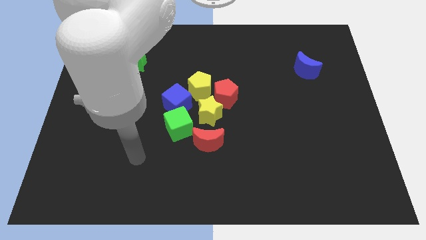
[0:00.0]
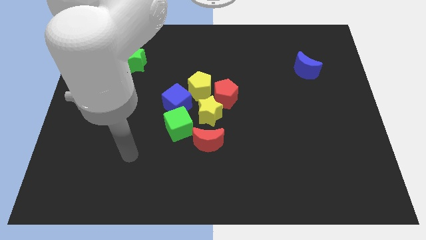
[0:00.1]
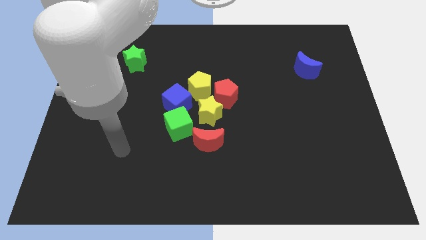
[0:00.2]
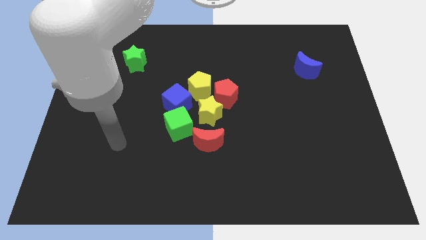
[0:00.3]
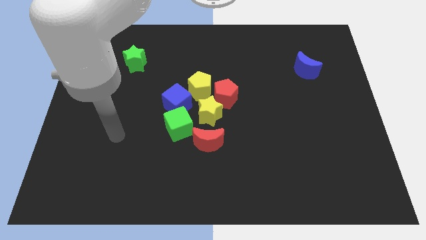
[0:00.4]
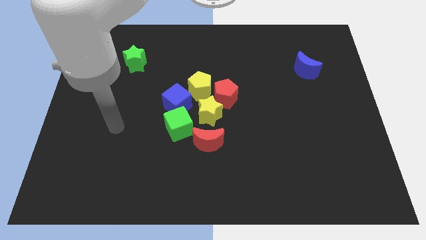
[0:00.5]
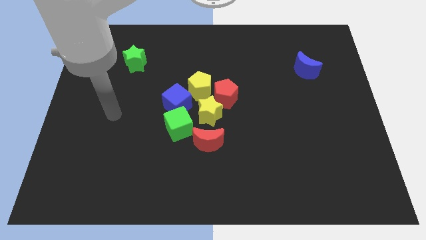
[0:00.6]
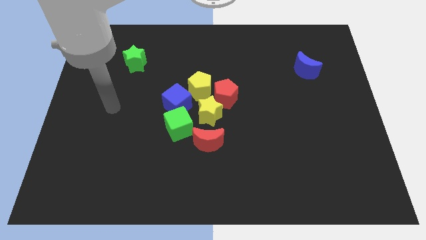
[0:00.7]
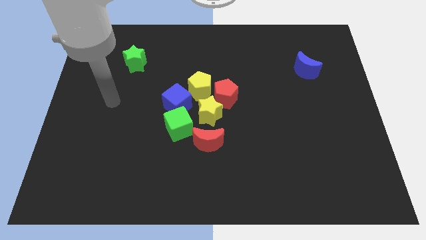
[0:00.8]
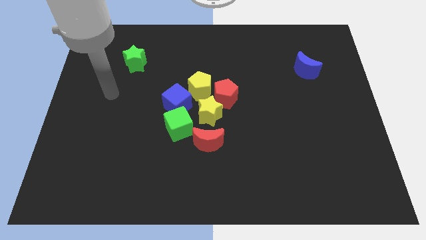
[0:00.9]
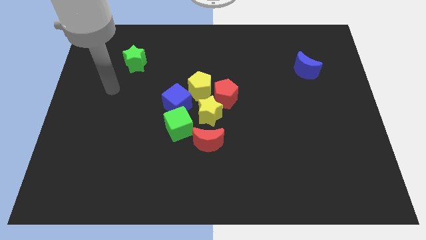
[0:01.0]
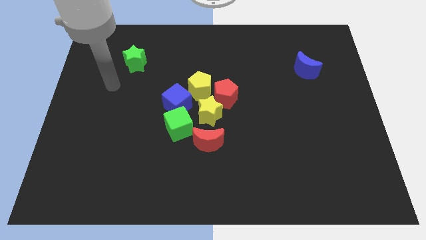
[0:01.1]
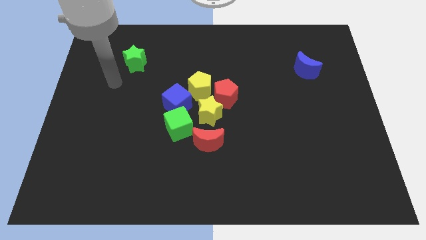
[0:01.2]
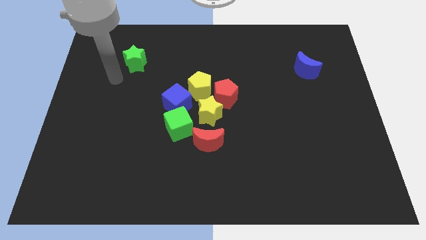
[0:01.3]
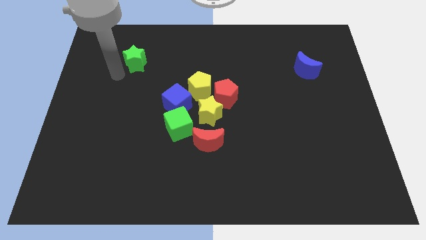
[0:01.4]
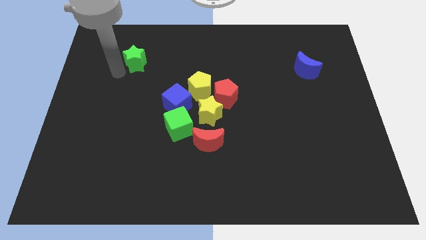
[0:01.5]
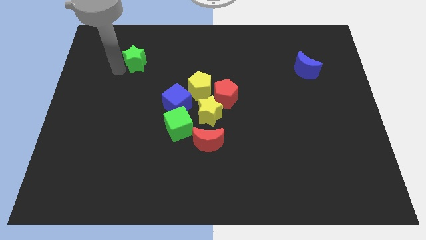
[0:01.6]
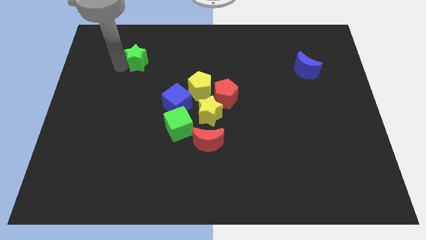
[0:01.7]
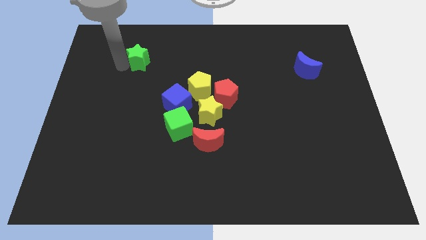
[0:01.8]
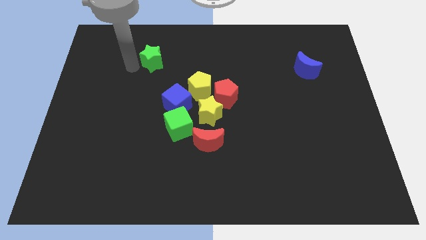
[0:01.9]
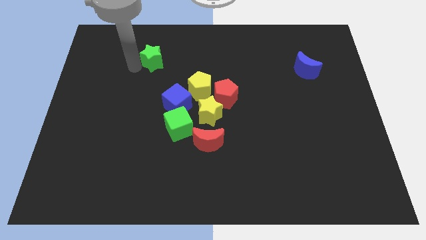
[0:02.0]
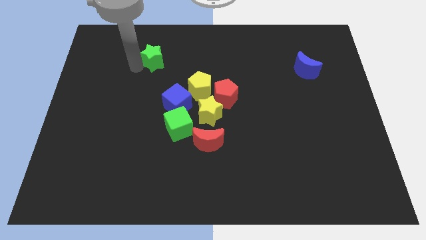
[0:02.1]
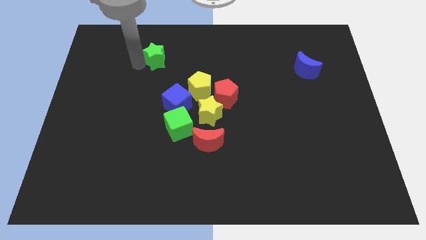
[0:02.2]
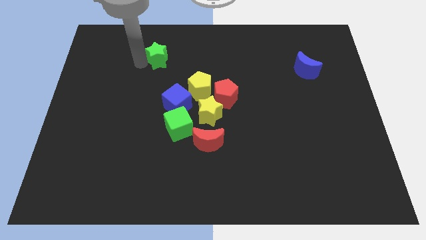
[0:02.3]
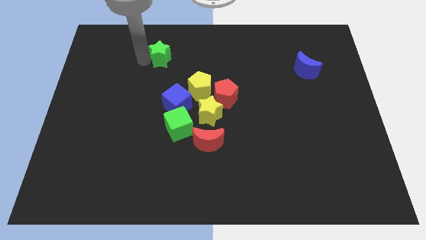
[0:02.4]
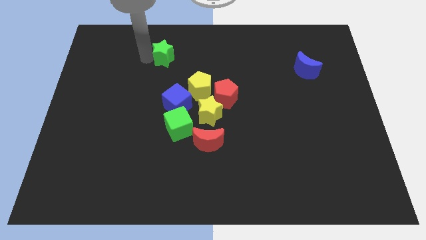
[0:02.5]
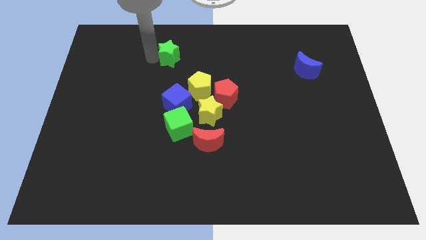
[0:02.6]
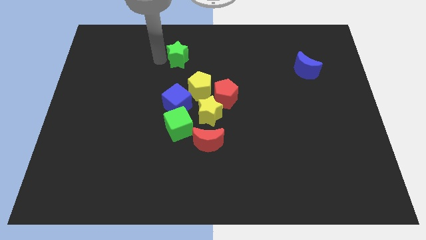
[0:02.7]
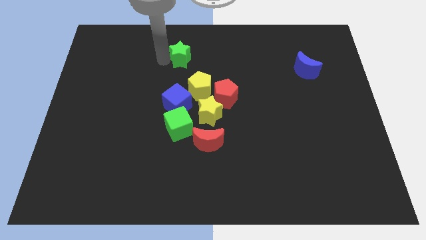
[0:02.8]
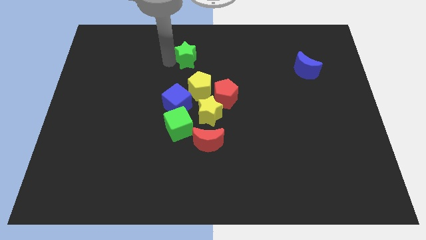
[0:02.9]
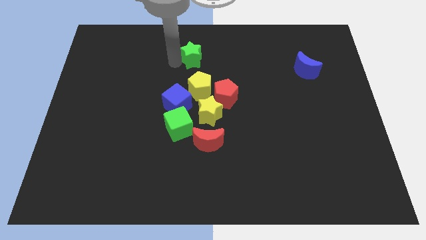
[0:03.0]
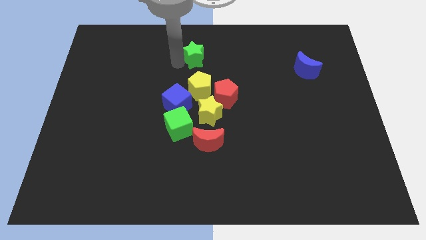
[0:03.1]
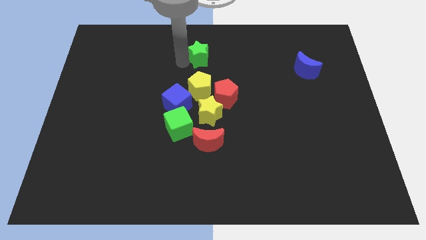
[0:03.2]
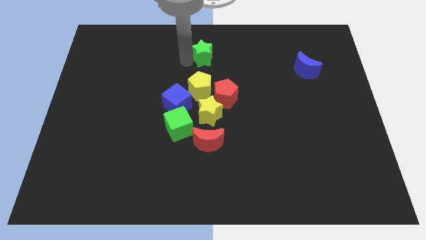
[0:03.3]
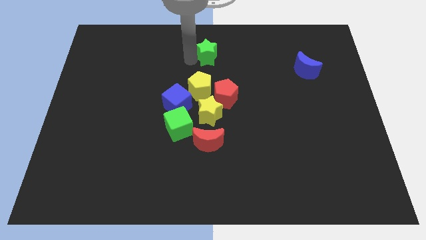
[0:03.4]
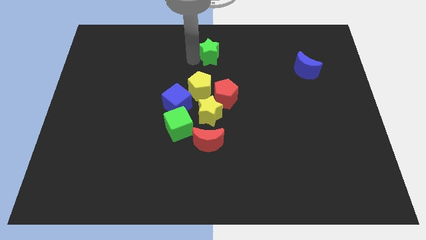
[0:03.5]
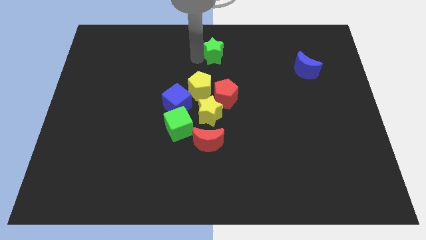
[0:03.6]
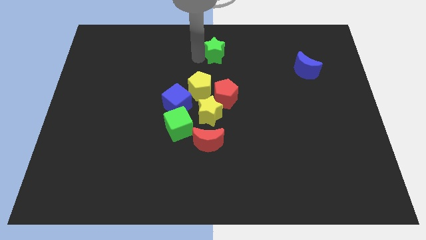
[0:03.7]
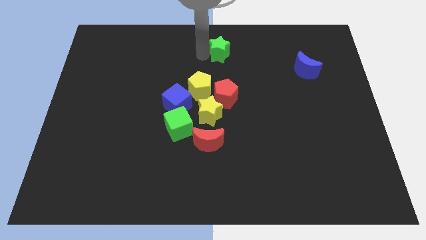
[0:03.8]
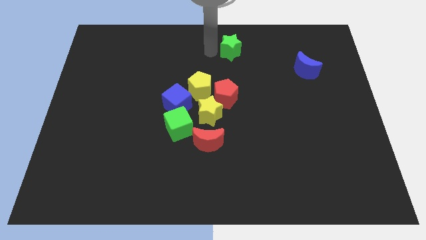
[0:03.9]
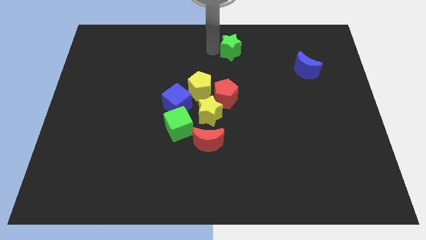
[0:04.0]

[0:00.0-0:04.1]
place the green star at the top center

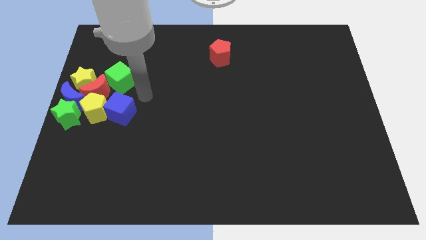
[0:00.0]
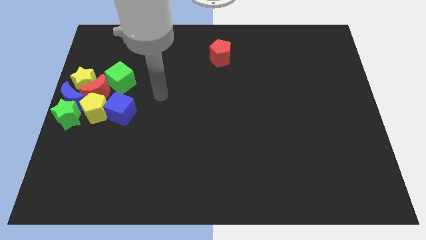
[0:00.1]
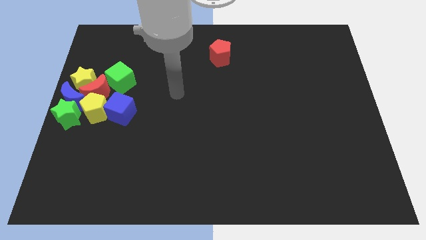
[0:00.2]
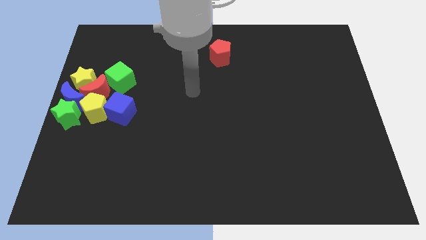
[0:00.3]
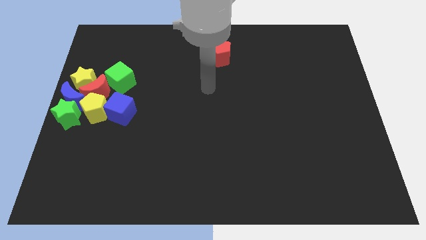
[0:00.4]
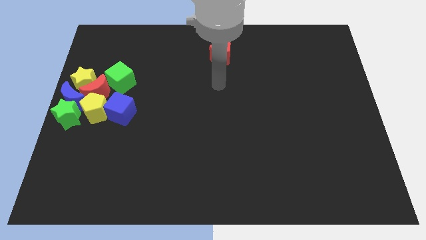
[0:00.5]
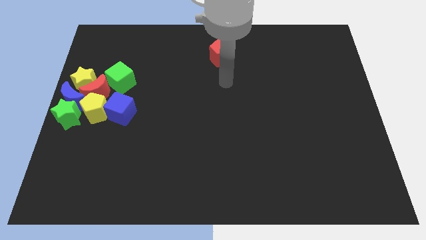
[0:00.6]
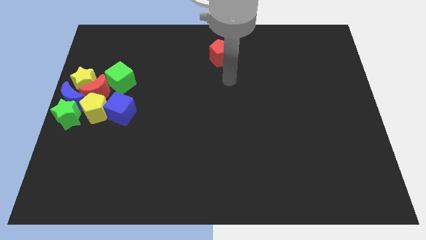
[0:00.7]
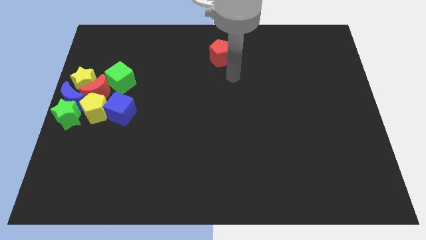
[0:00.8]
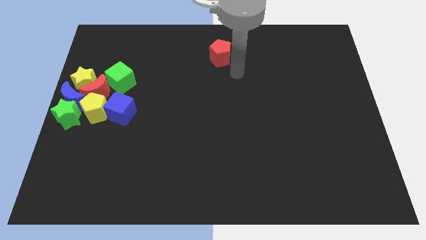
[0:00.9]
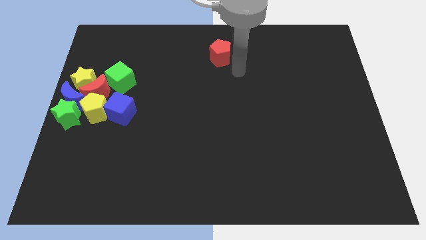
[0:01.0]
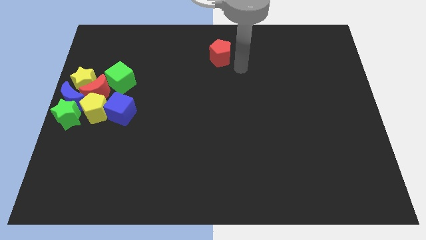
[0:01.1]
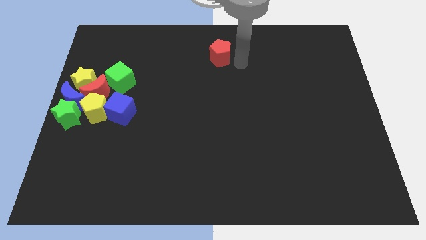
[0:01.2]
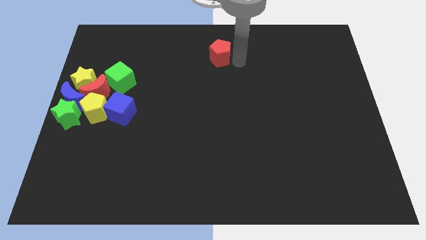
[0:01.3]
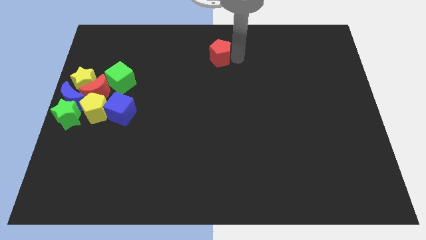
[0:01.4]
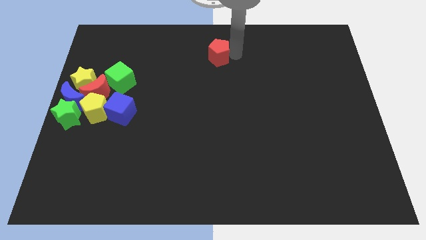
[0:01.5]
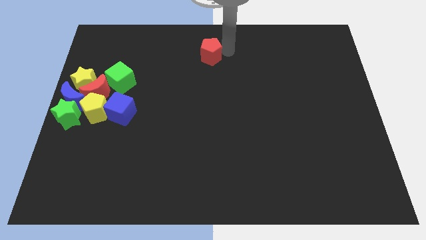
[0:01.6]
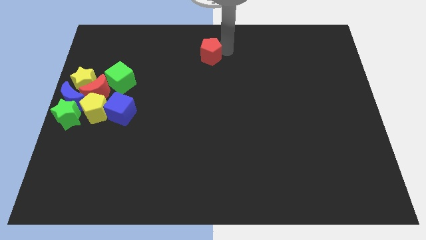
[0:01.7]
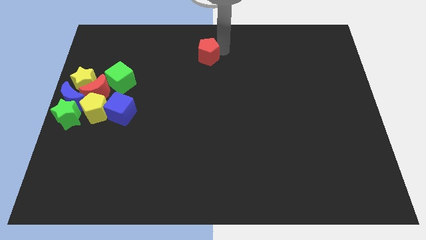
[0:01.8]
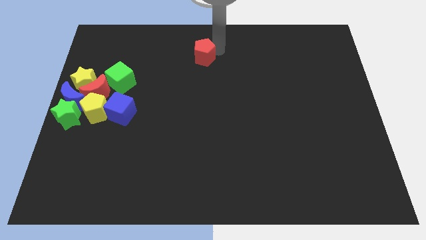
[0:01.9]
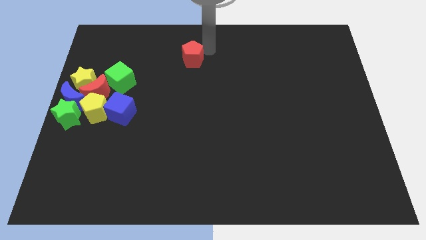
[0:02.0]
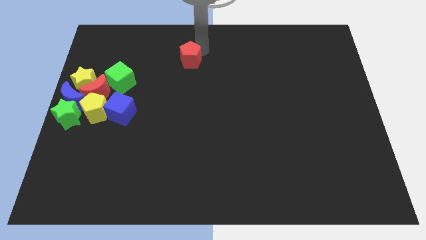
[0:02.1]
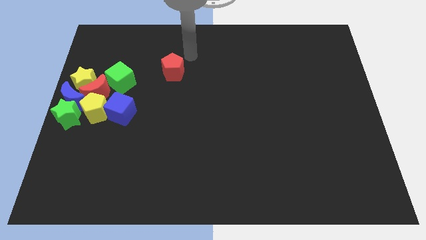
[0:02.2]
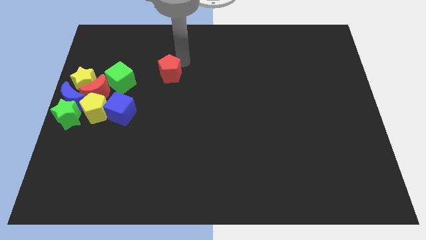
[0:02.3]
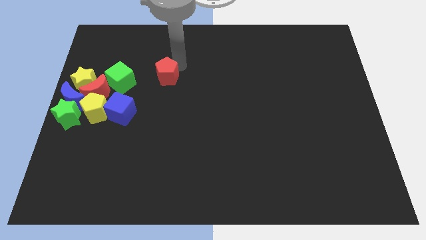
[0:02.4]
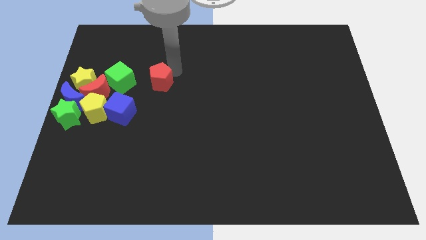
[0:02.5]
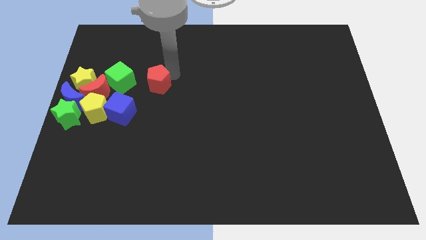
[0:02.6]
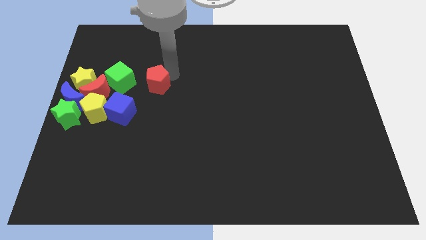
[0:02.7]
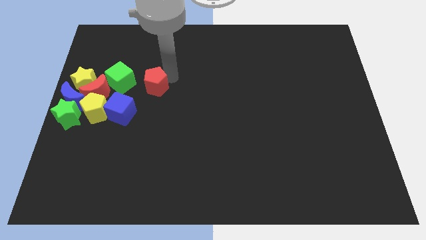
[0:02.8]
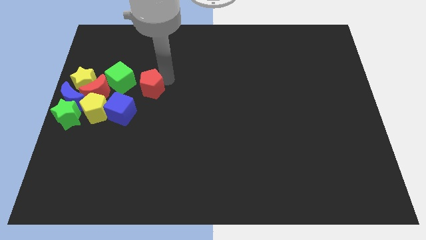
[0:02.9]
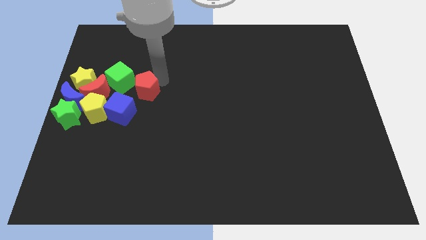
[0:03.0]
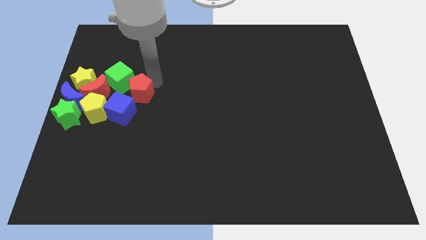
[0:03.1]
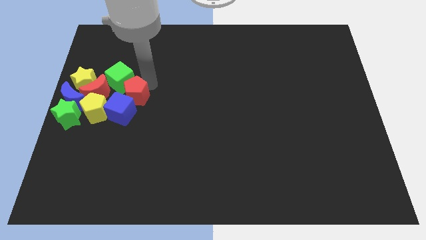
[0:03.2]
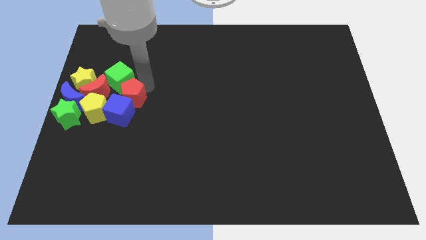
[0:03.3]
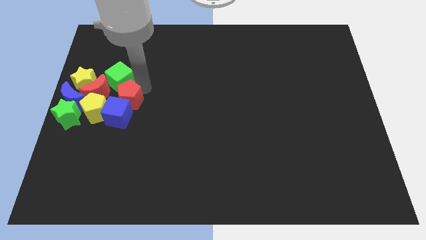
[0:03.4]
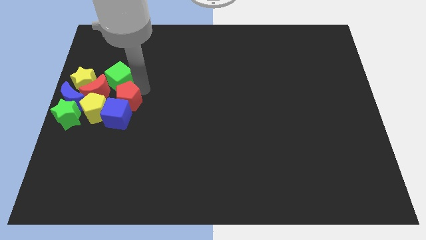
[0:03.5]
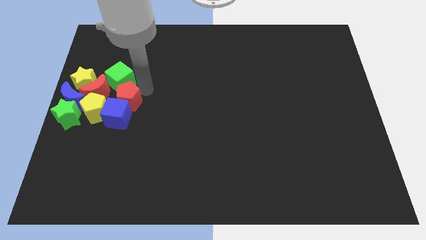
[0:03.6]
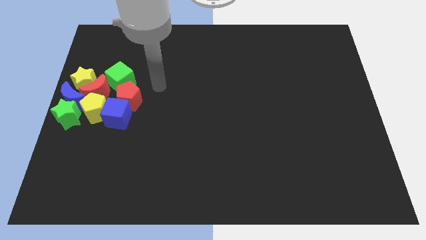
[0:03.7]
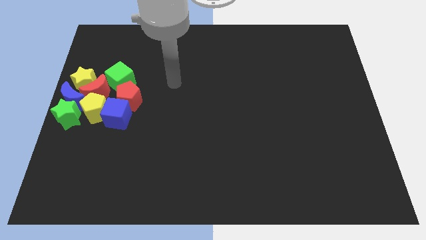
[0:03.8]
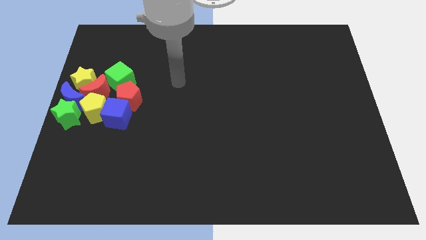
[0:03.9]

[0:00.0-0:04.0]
place the red pentagon above the blue cube

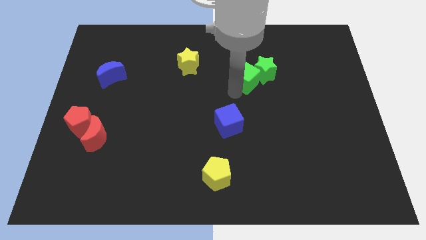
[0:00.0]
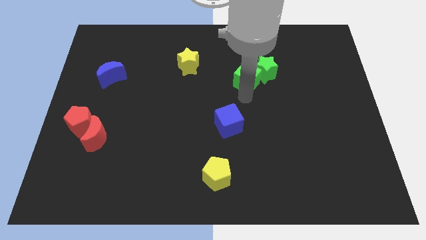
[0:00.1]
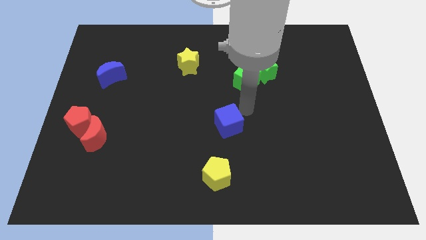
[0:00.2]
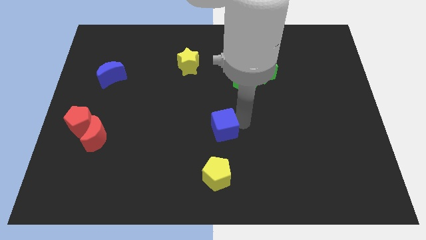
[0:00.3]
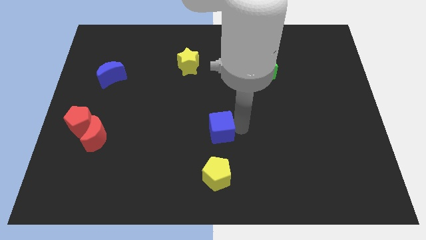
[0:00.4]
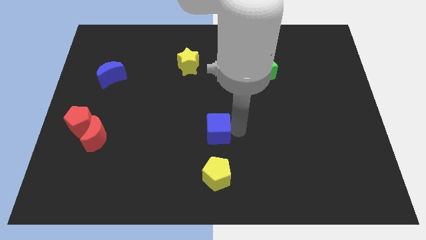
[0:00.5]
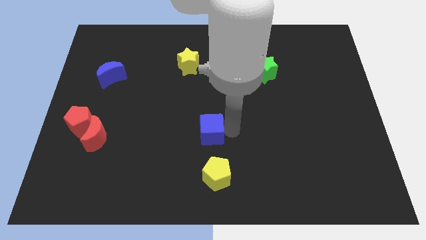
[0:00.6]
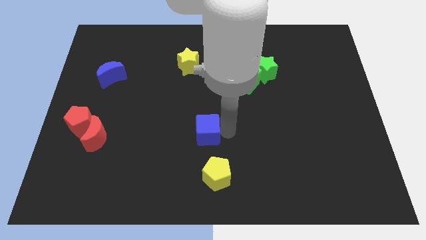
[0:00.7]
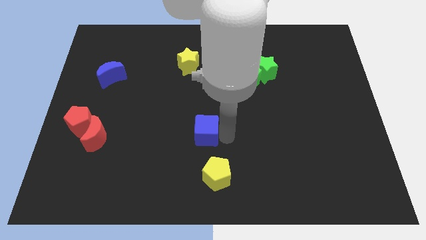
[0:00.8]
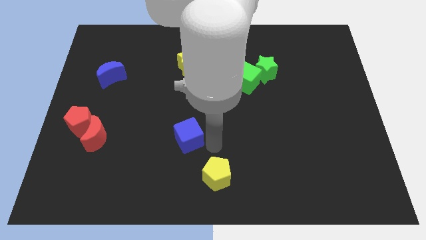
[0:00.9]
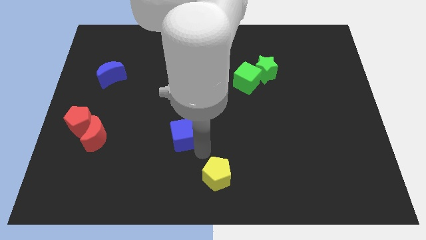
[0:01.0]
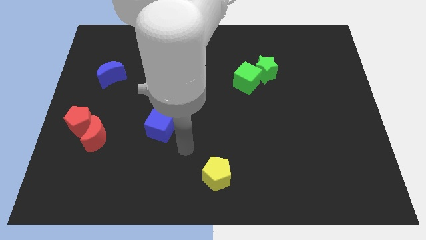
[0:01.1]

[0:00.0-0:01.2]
slide the blue cube slightly to the left
